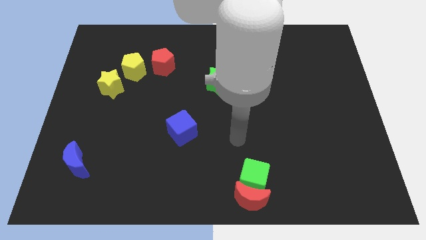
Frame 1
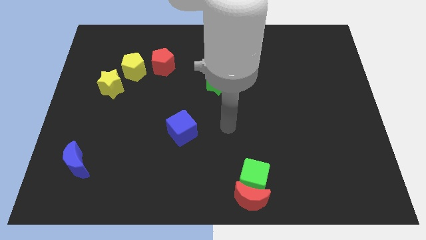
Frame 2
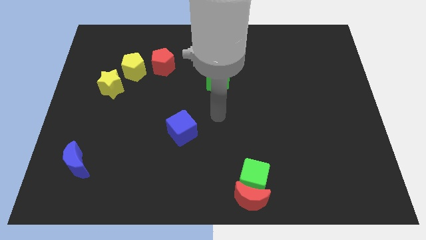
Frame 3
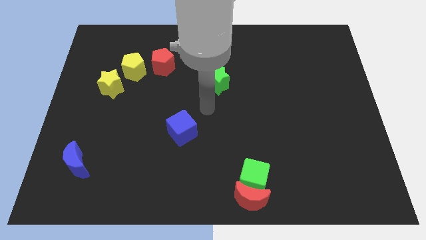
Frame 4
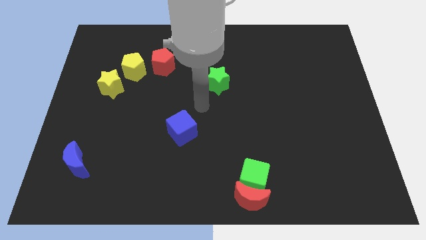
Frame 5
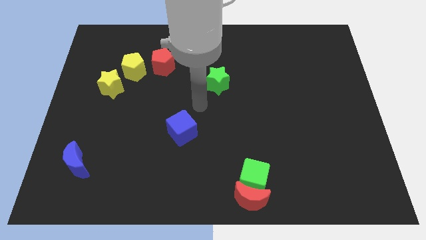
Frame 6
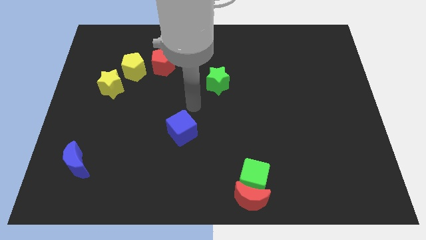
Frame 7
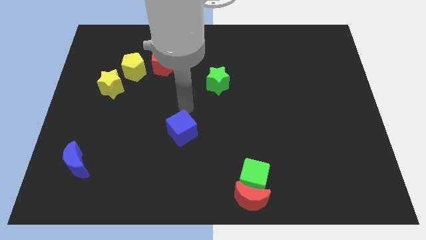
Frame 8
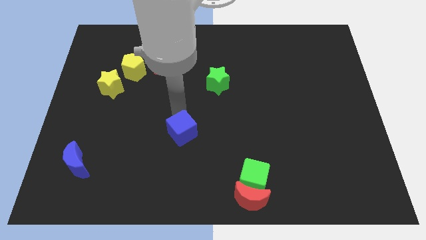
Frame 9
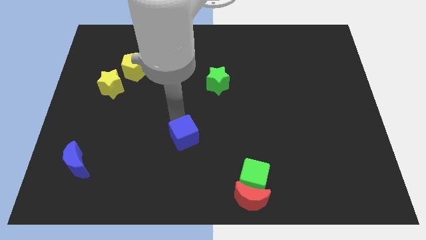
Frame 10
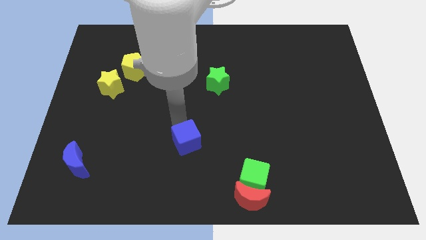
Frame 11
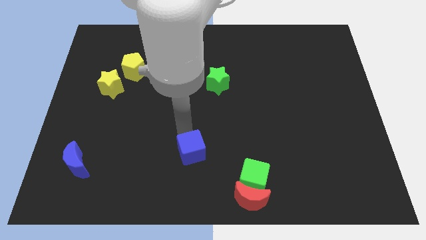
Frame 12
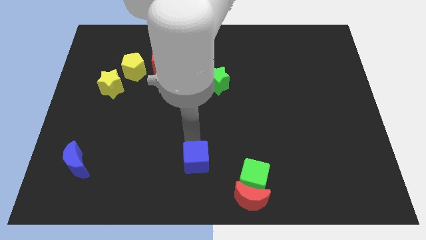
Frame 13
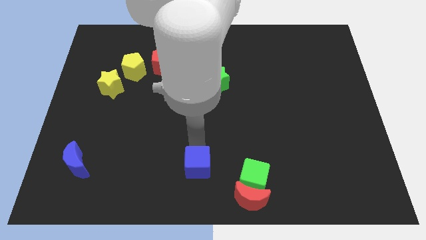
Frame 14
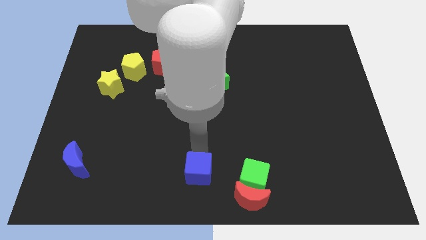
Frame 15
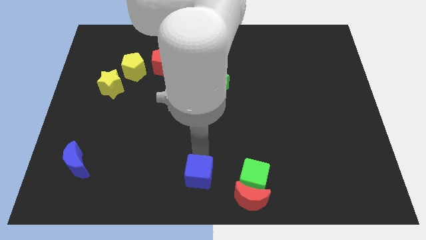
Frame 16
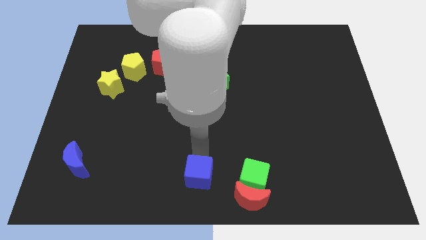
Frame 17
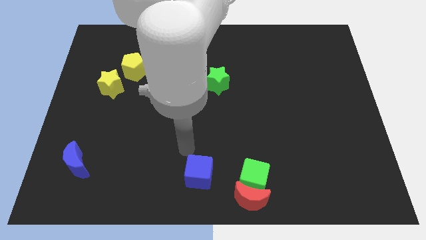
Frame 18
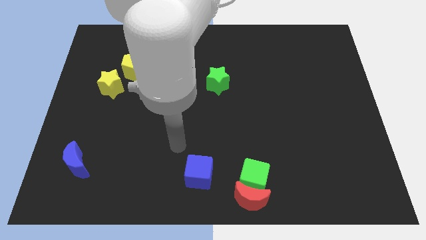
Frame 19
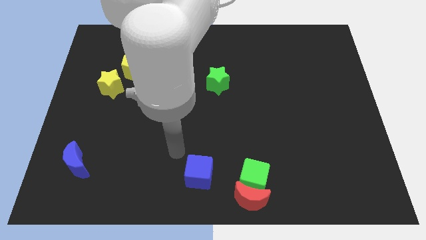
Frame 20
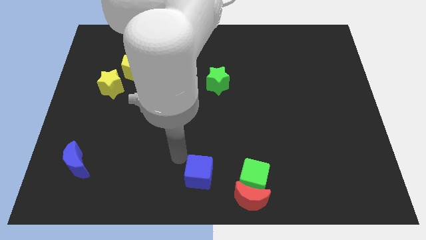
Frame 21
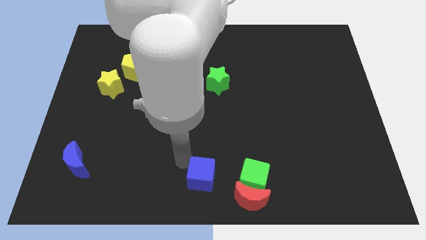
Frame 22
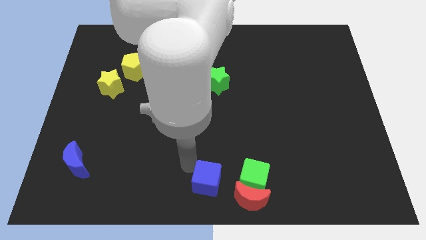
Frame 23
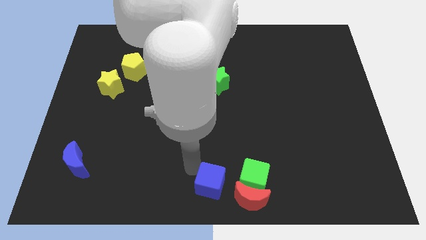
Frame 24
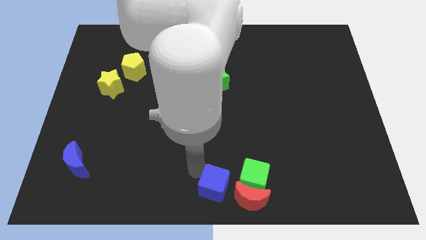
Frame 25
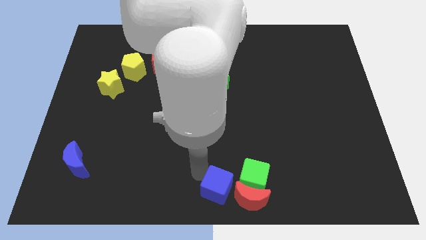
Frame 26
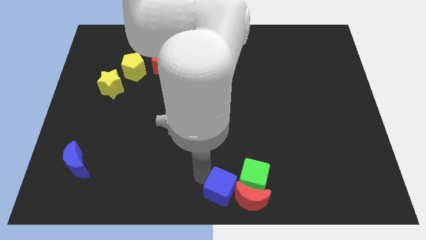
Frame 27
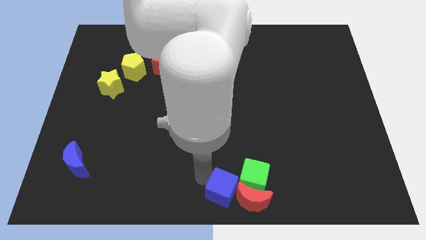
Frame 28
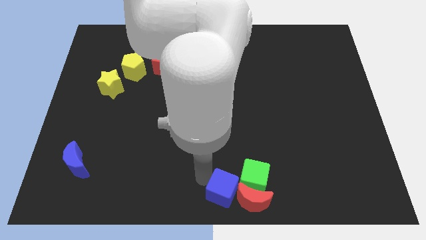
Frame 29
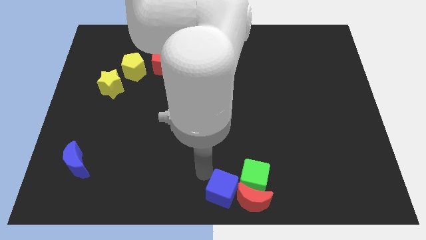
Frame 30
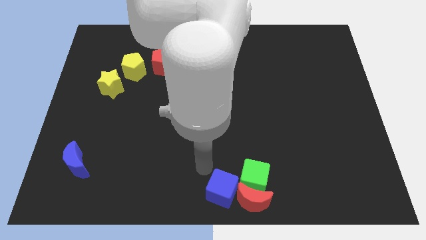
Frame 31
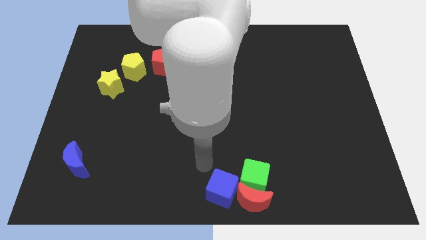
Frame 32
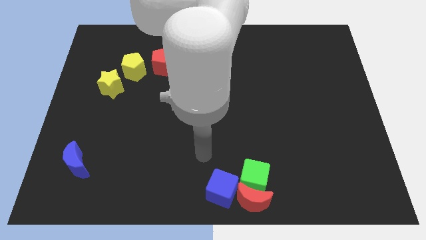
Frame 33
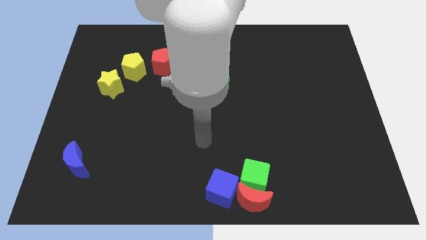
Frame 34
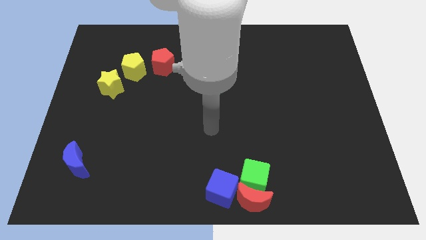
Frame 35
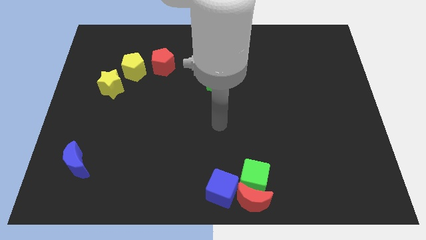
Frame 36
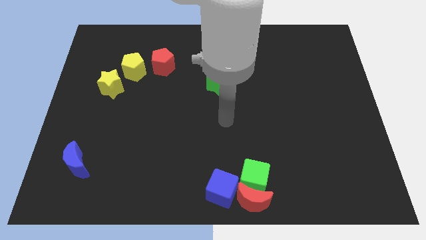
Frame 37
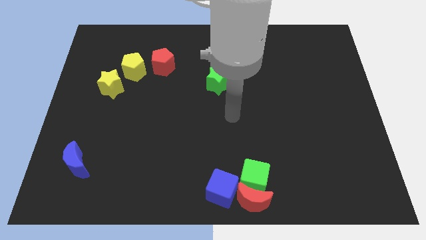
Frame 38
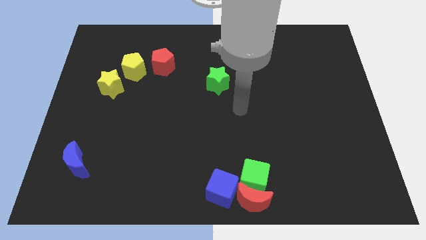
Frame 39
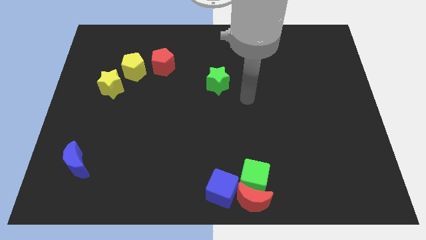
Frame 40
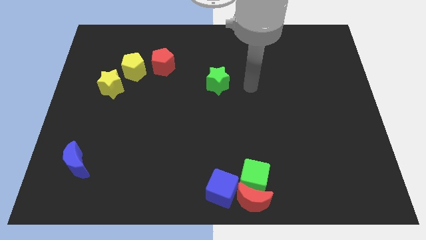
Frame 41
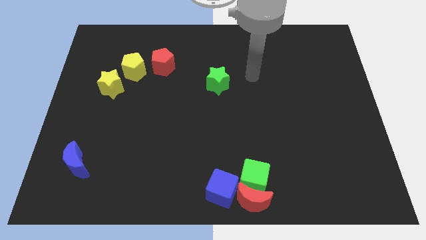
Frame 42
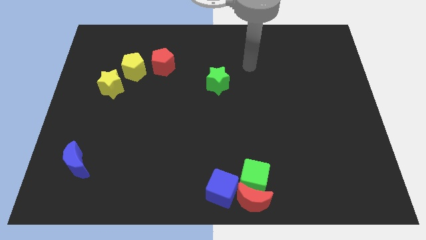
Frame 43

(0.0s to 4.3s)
move the blue cube near to the red crescent

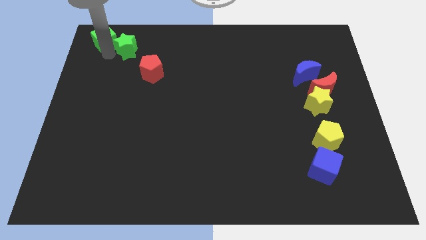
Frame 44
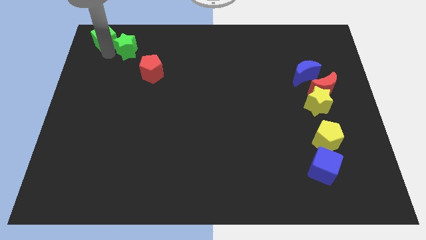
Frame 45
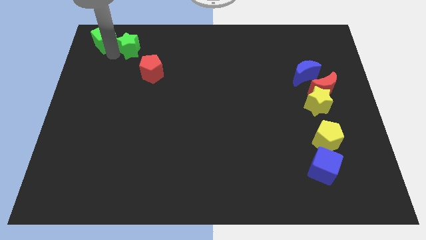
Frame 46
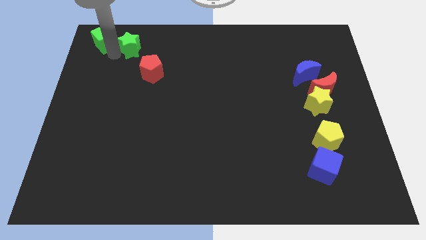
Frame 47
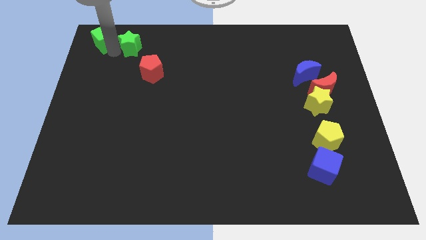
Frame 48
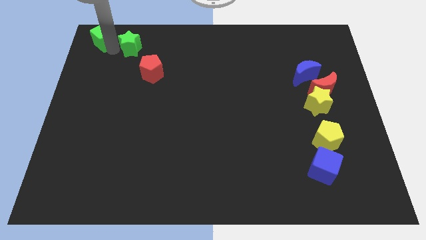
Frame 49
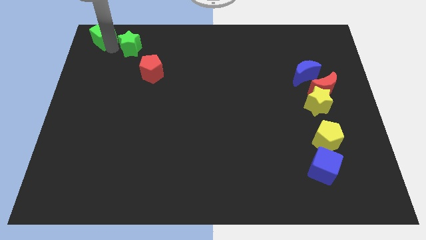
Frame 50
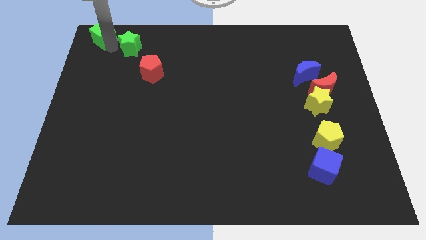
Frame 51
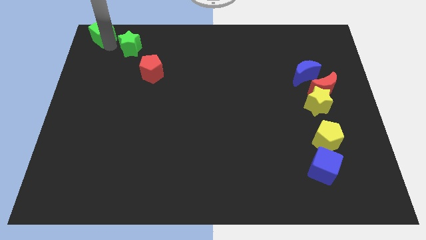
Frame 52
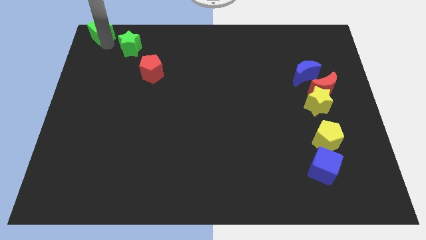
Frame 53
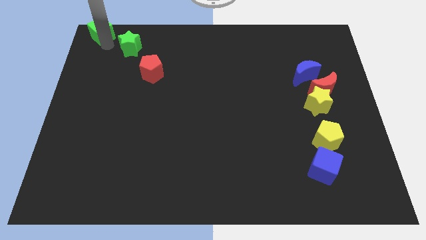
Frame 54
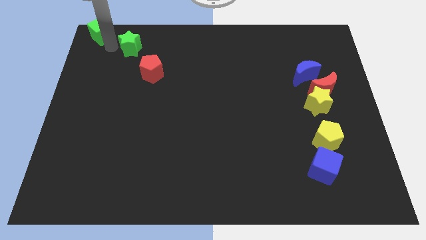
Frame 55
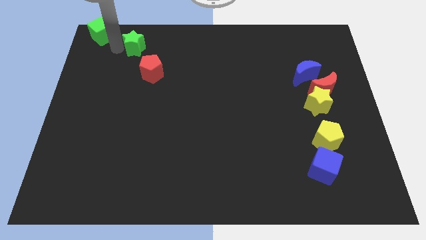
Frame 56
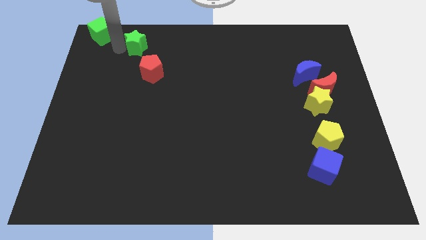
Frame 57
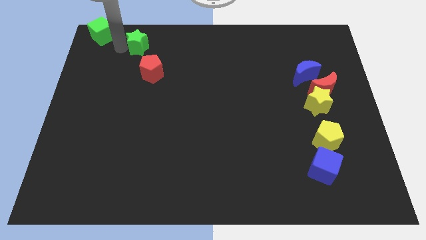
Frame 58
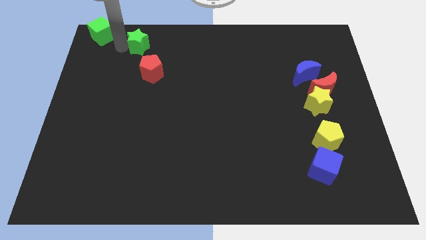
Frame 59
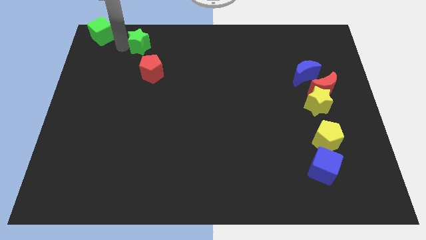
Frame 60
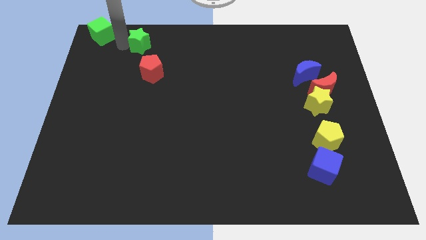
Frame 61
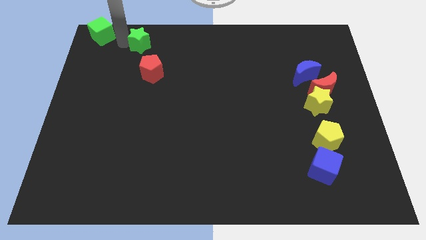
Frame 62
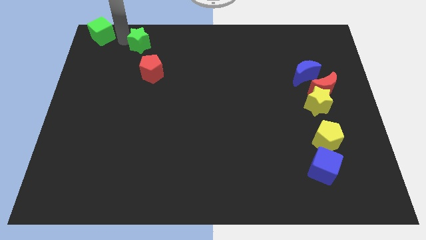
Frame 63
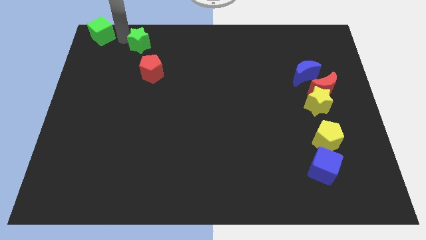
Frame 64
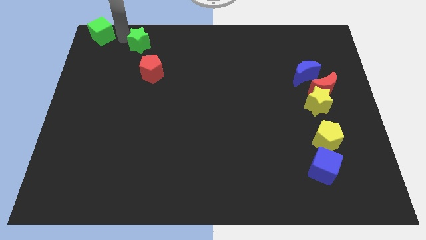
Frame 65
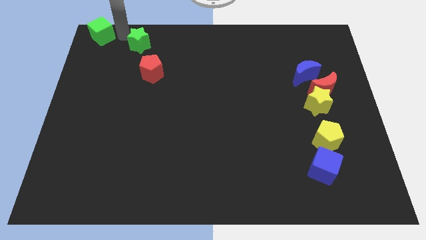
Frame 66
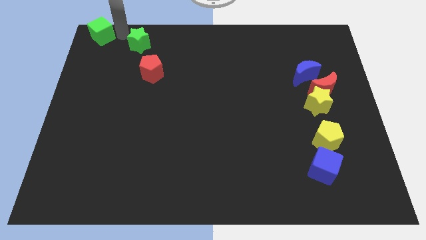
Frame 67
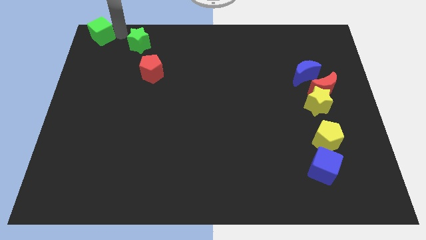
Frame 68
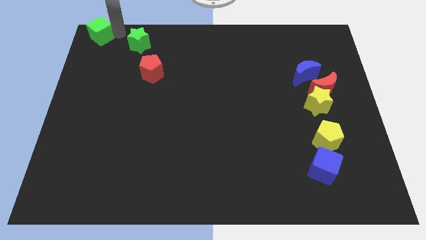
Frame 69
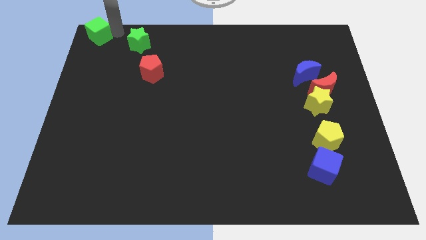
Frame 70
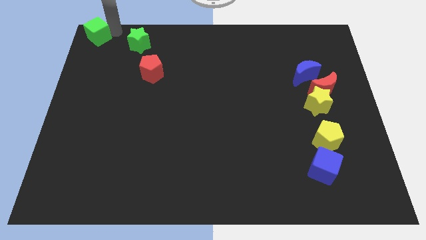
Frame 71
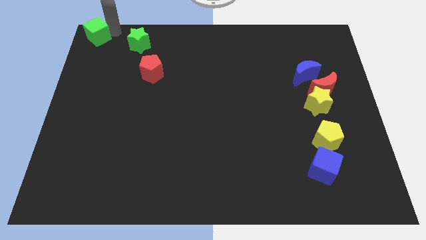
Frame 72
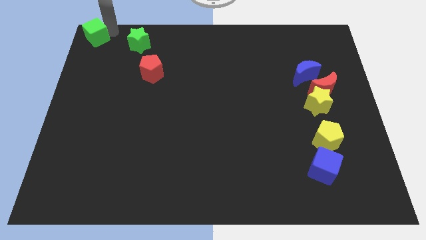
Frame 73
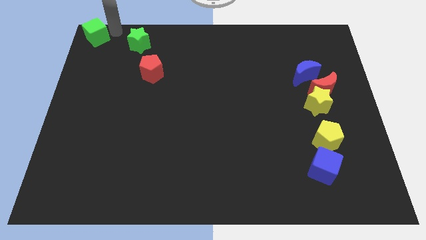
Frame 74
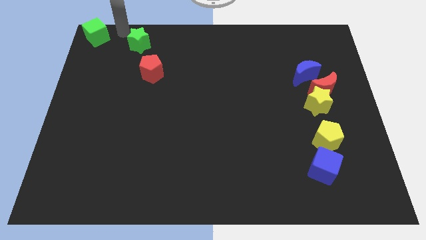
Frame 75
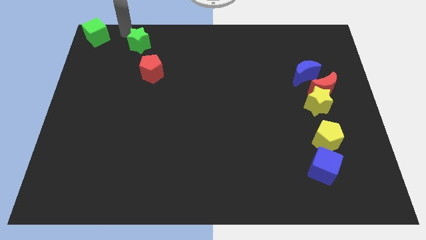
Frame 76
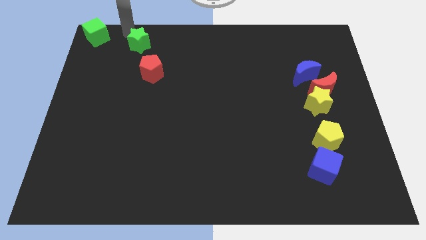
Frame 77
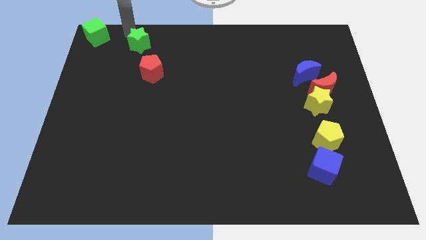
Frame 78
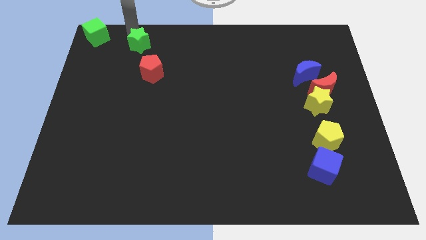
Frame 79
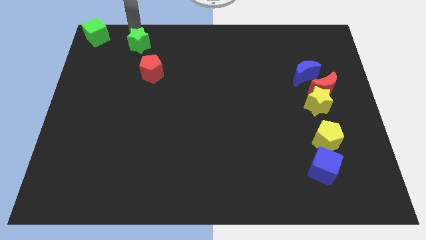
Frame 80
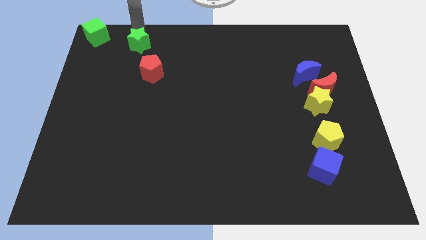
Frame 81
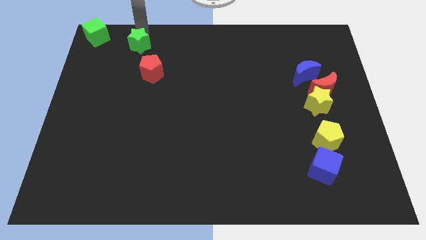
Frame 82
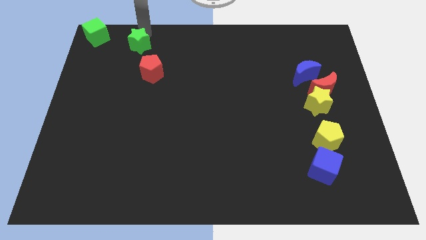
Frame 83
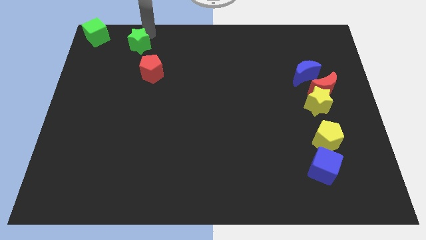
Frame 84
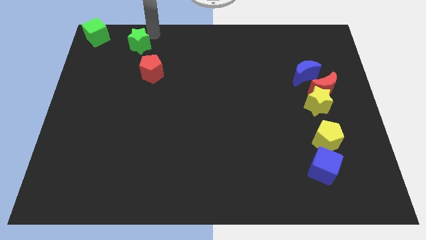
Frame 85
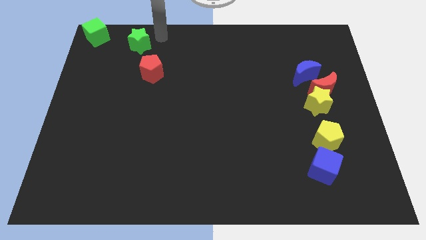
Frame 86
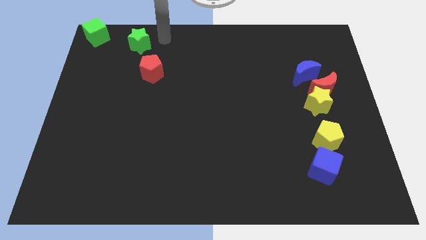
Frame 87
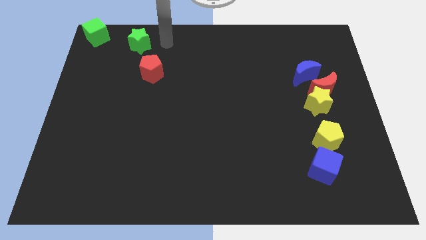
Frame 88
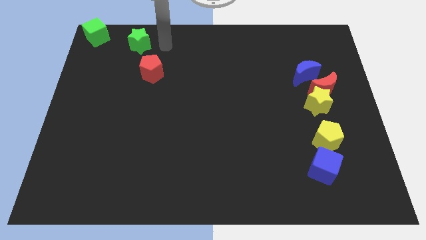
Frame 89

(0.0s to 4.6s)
separate the green cube from the green star
